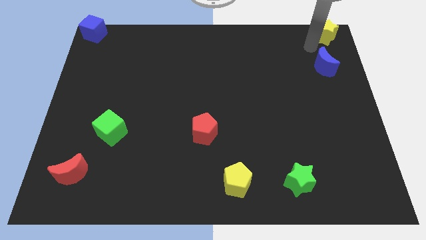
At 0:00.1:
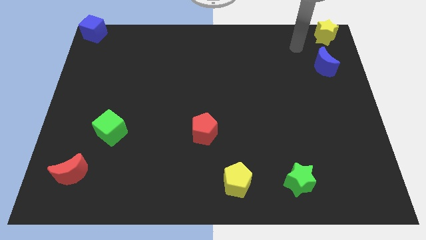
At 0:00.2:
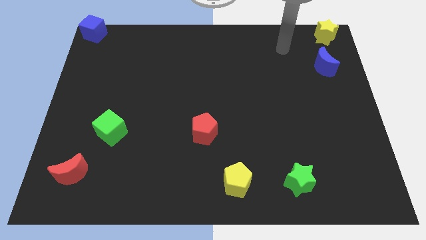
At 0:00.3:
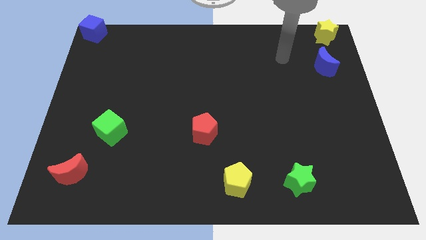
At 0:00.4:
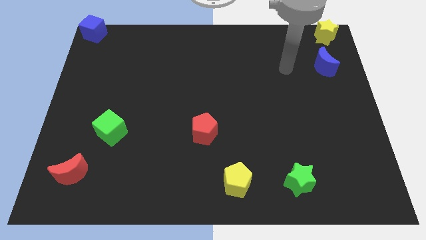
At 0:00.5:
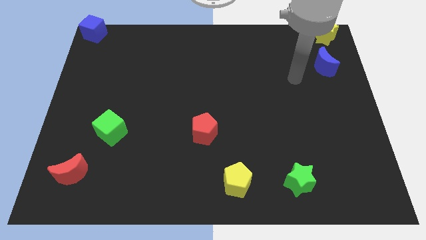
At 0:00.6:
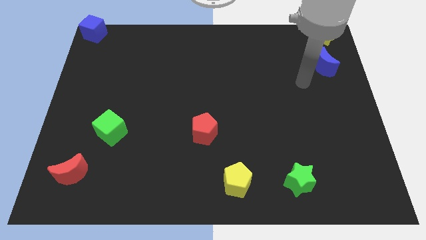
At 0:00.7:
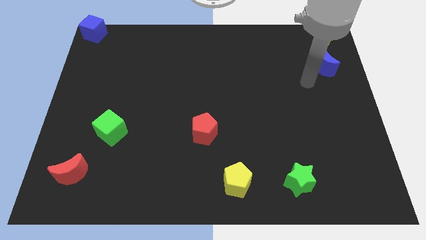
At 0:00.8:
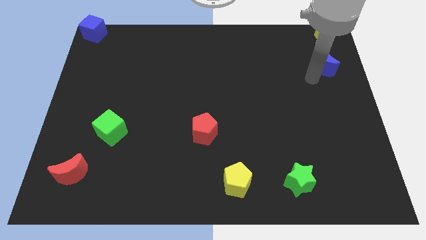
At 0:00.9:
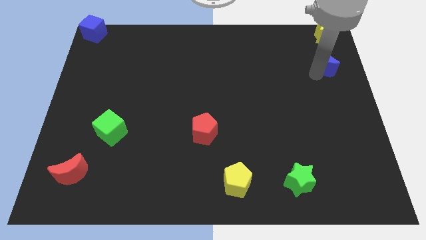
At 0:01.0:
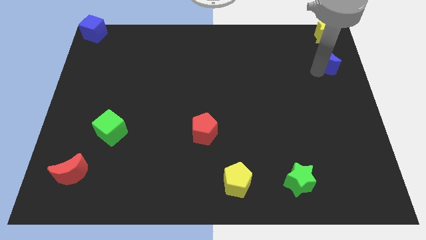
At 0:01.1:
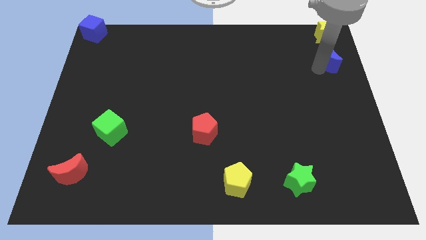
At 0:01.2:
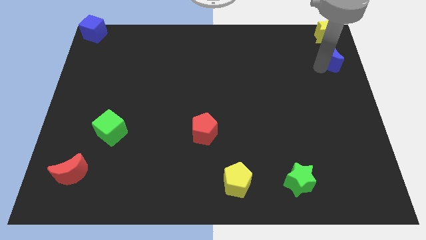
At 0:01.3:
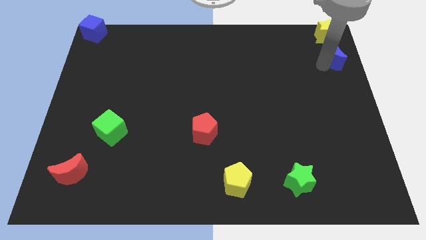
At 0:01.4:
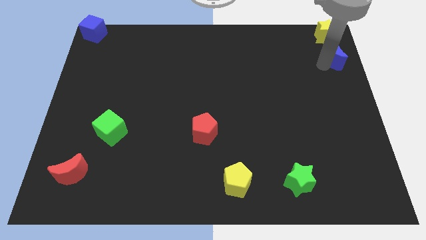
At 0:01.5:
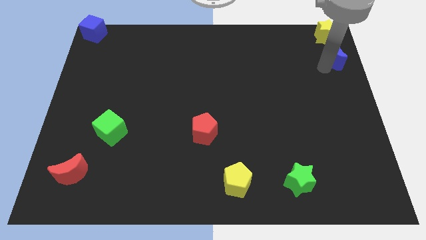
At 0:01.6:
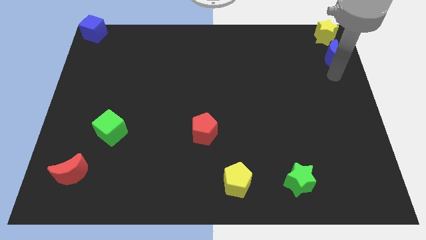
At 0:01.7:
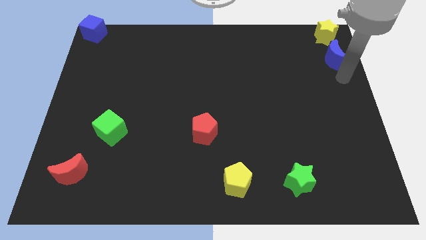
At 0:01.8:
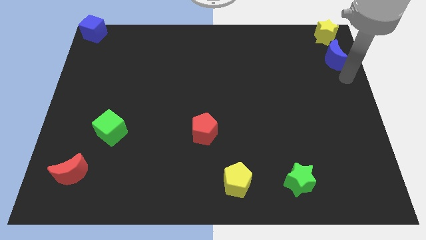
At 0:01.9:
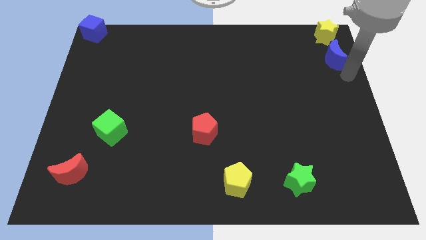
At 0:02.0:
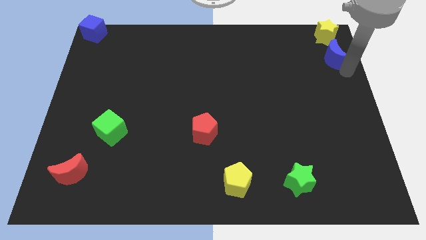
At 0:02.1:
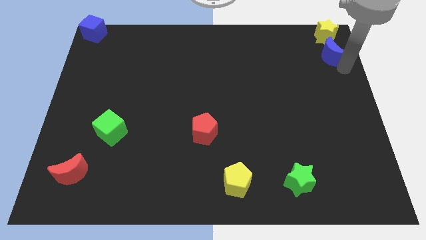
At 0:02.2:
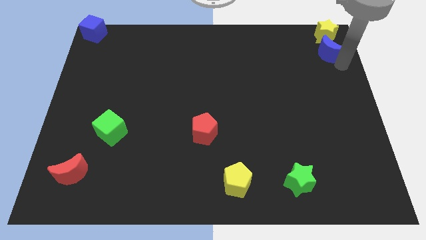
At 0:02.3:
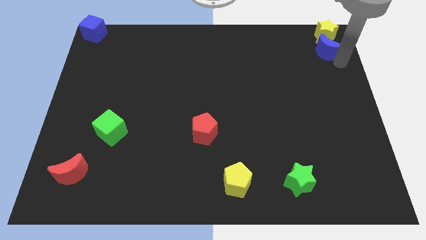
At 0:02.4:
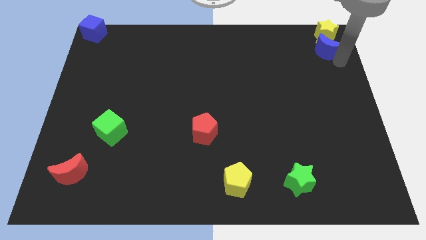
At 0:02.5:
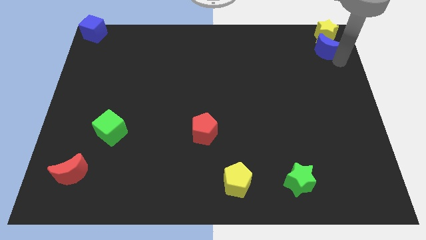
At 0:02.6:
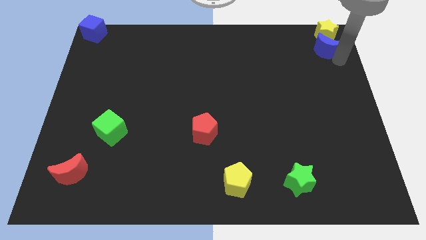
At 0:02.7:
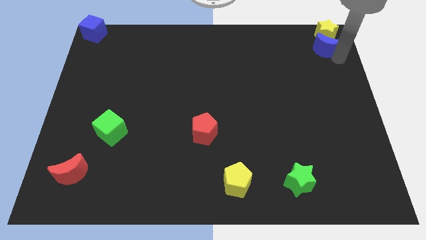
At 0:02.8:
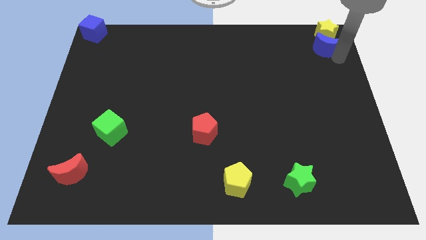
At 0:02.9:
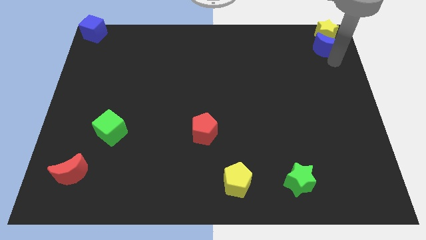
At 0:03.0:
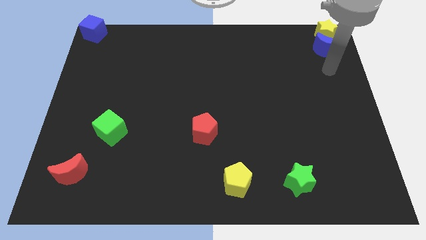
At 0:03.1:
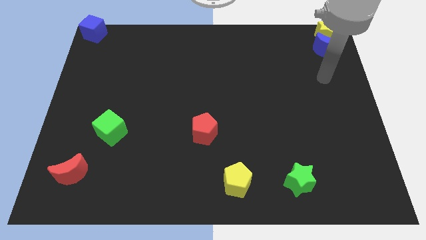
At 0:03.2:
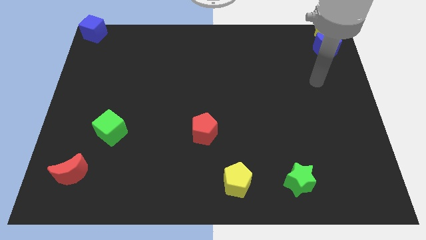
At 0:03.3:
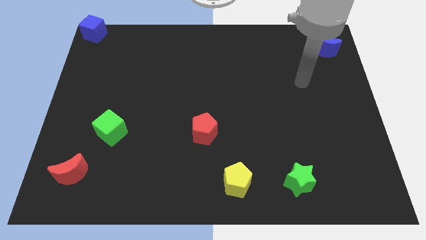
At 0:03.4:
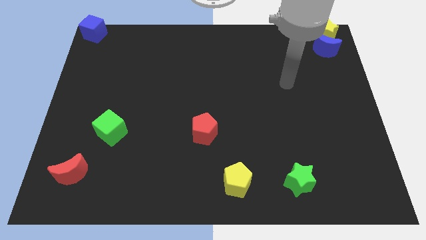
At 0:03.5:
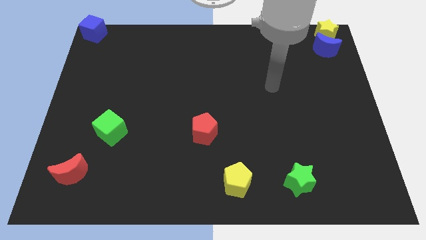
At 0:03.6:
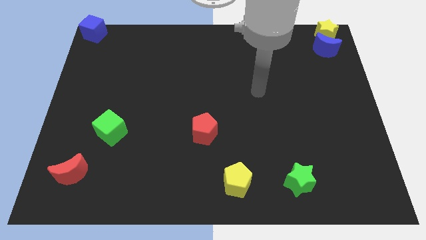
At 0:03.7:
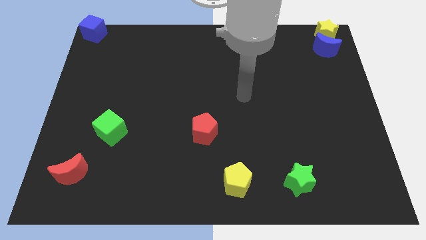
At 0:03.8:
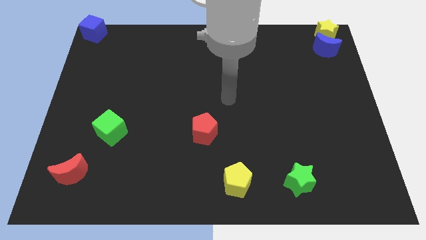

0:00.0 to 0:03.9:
move the blue moon to the bottom of the yellow star

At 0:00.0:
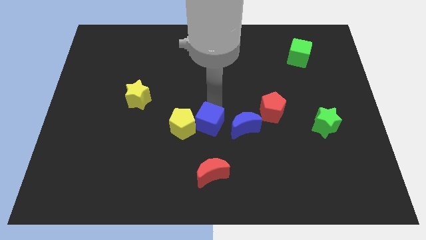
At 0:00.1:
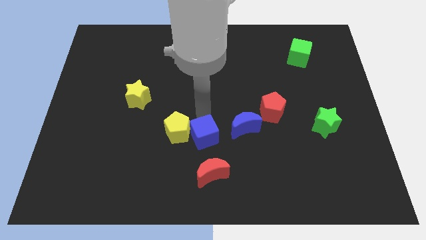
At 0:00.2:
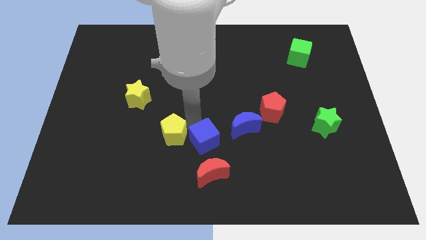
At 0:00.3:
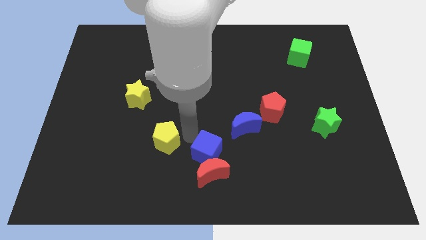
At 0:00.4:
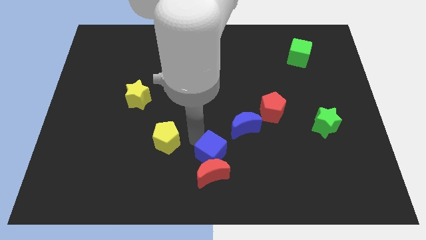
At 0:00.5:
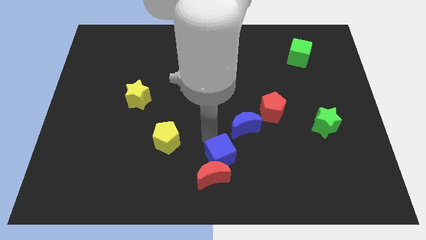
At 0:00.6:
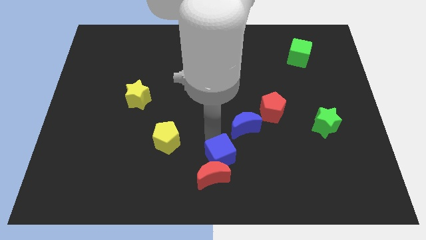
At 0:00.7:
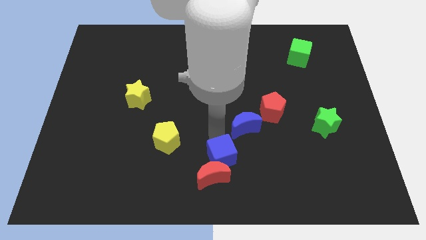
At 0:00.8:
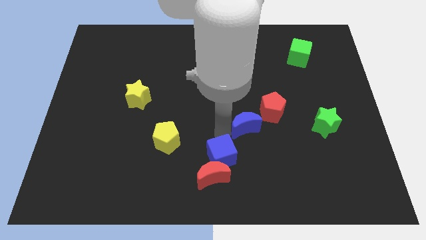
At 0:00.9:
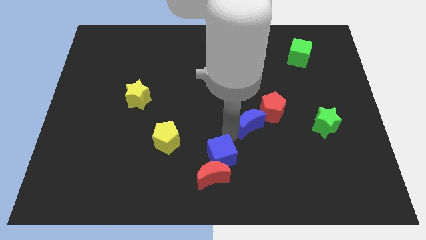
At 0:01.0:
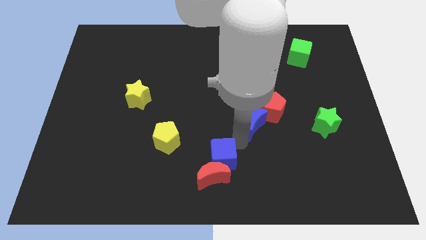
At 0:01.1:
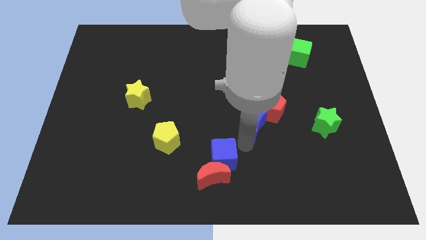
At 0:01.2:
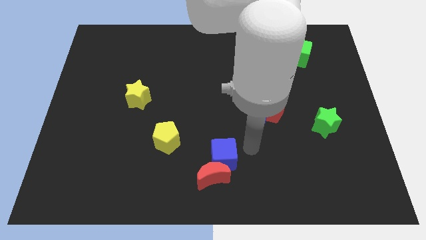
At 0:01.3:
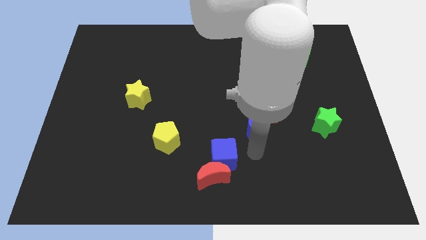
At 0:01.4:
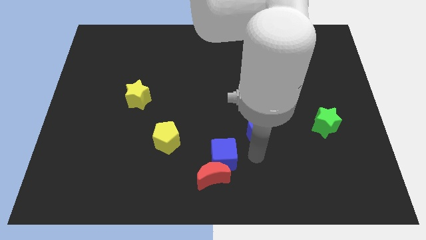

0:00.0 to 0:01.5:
separate the blue cube and yellow pentagon

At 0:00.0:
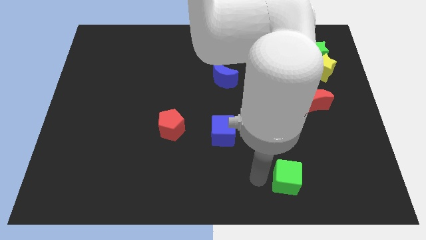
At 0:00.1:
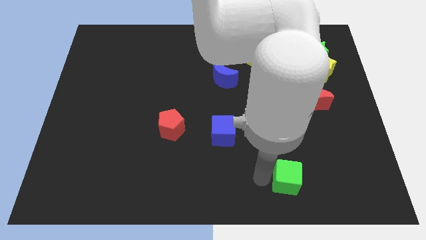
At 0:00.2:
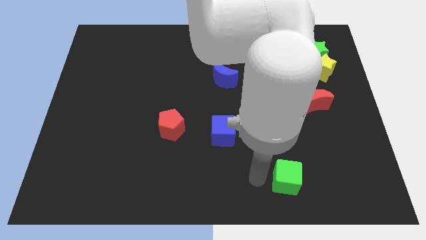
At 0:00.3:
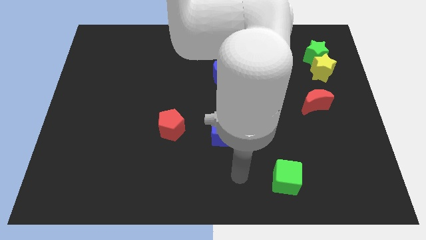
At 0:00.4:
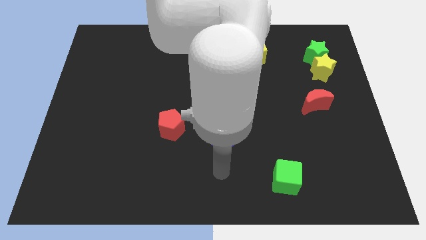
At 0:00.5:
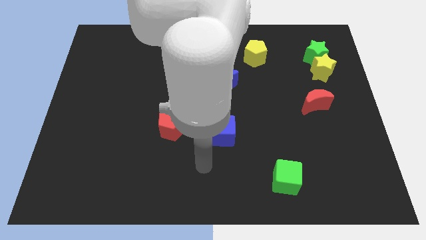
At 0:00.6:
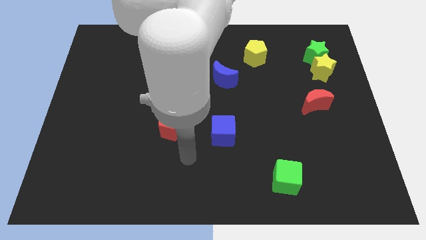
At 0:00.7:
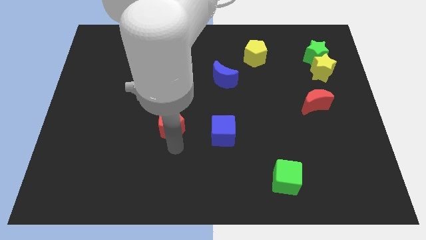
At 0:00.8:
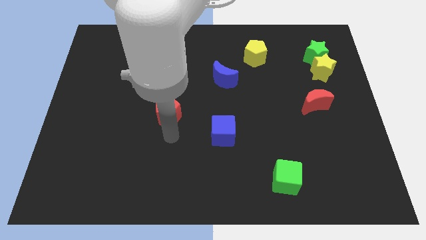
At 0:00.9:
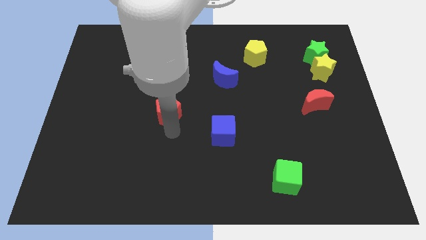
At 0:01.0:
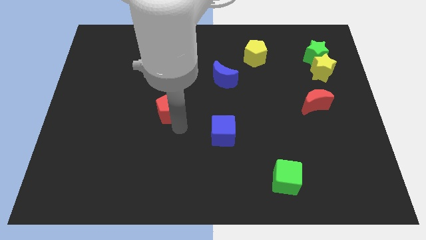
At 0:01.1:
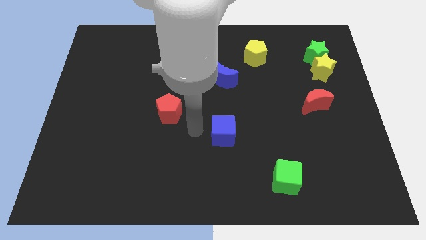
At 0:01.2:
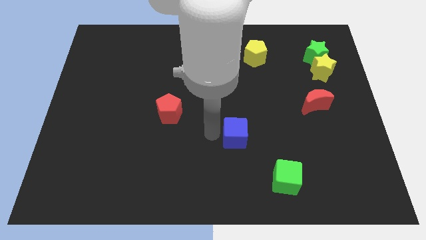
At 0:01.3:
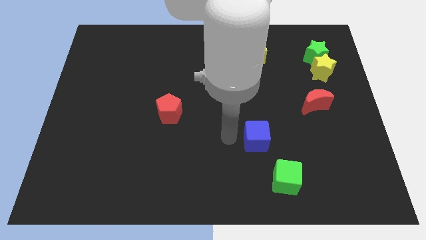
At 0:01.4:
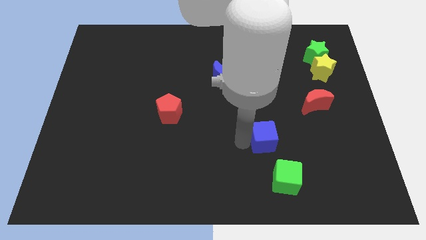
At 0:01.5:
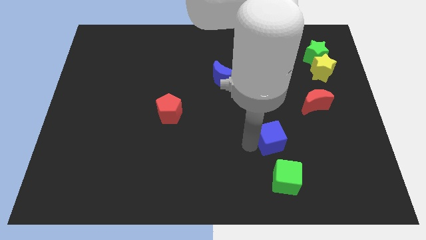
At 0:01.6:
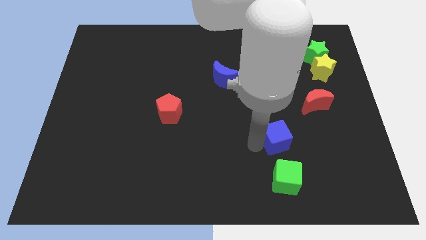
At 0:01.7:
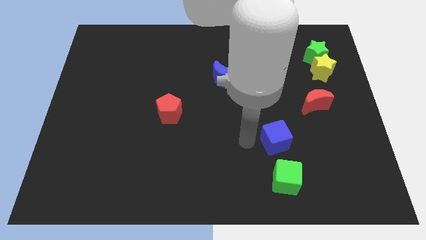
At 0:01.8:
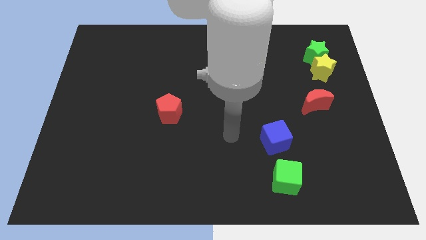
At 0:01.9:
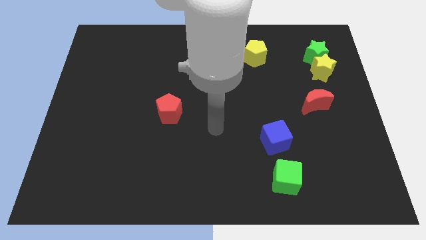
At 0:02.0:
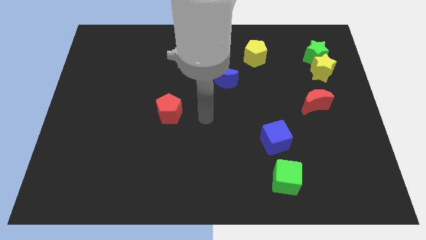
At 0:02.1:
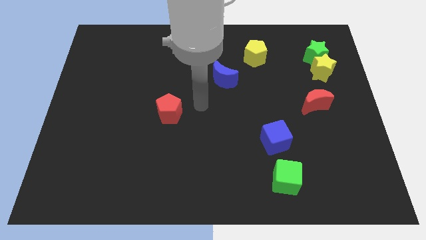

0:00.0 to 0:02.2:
move the blue cube towards the green cube

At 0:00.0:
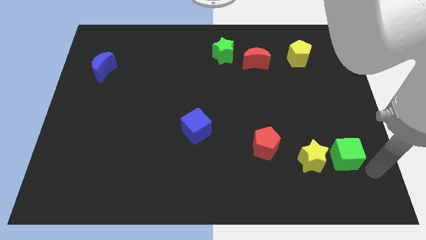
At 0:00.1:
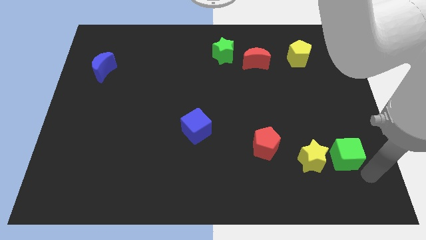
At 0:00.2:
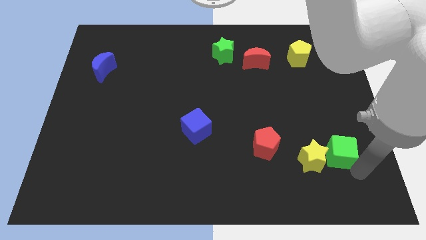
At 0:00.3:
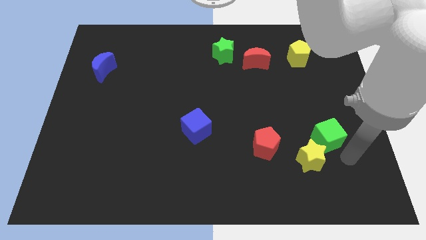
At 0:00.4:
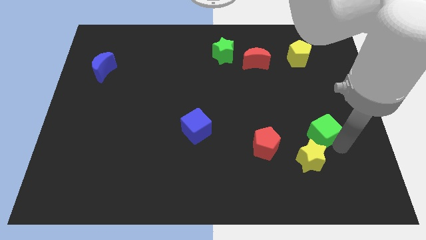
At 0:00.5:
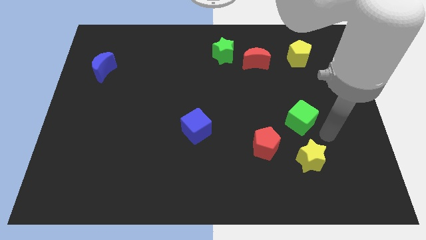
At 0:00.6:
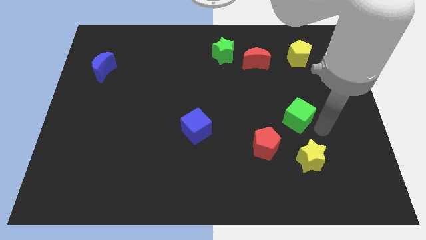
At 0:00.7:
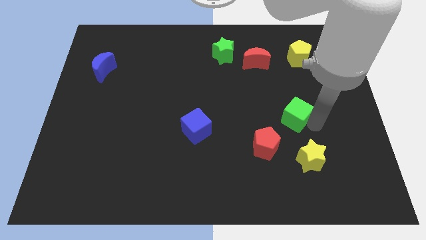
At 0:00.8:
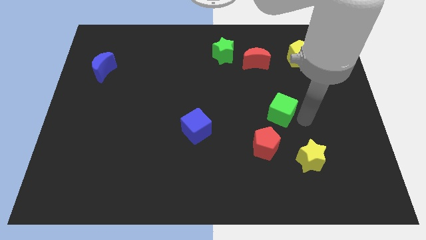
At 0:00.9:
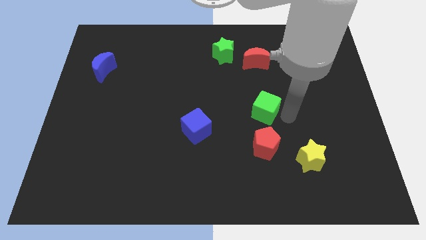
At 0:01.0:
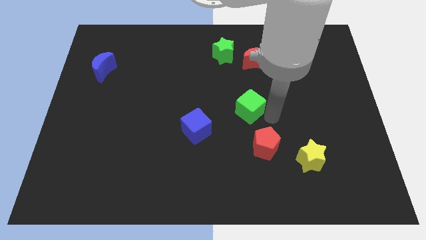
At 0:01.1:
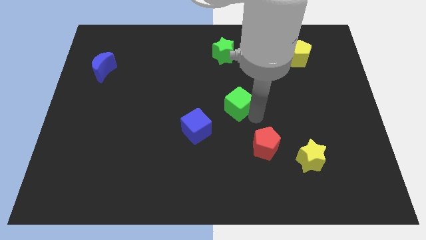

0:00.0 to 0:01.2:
separate green cube from yellow star

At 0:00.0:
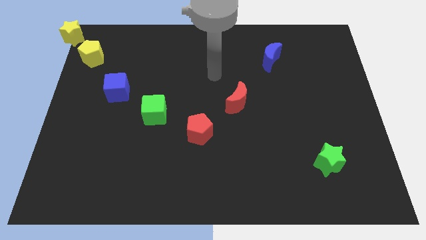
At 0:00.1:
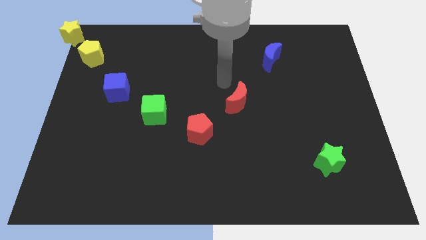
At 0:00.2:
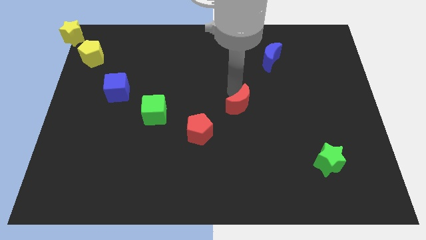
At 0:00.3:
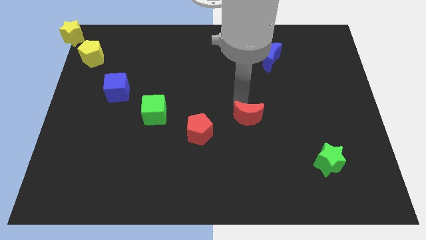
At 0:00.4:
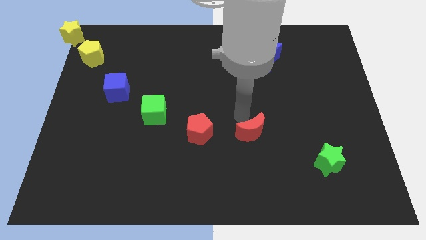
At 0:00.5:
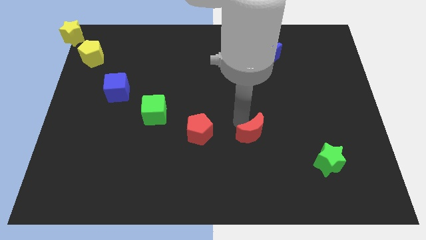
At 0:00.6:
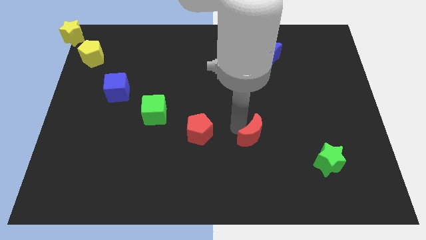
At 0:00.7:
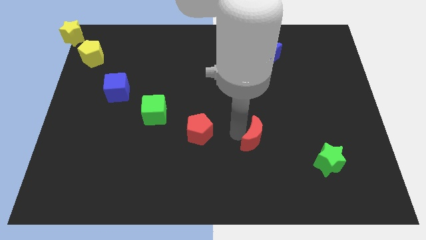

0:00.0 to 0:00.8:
move the red crescent to the right of the red pentagon
